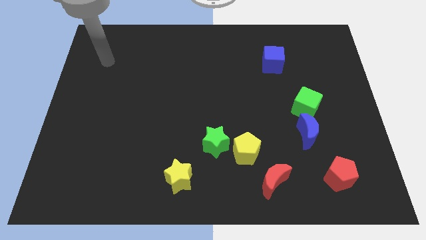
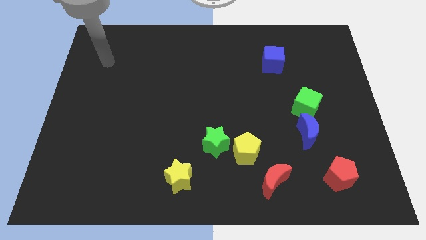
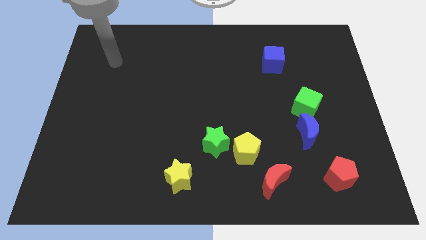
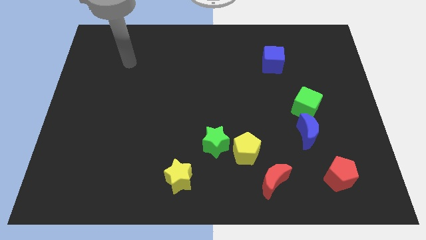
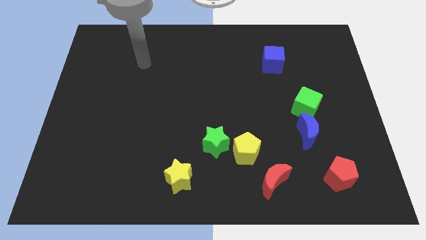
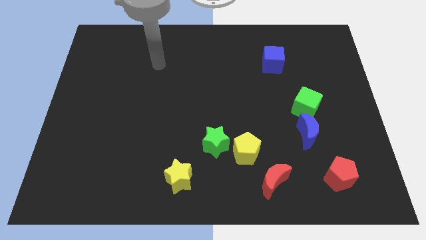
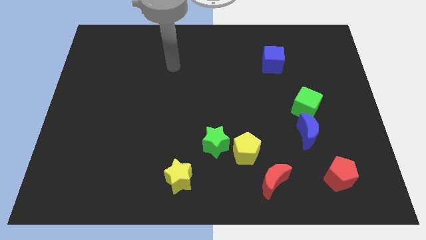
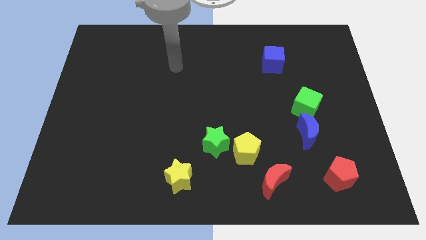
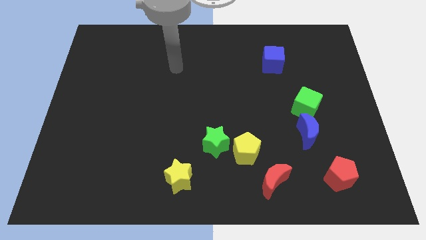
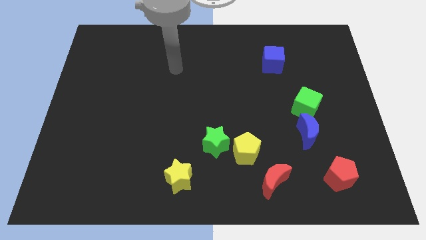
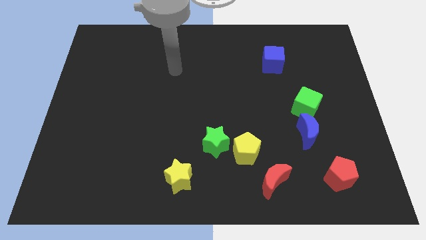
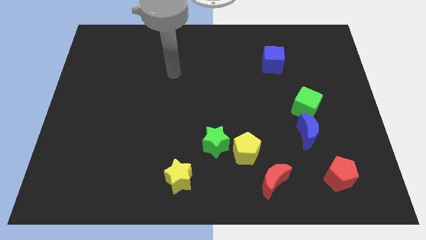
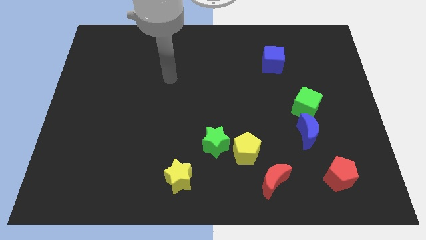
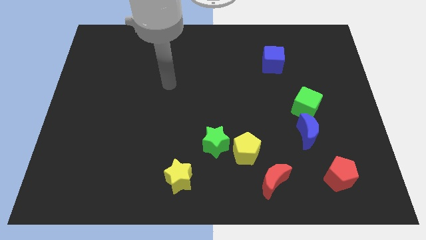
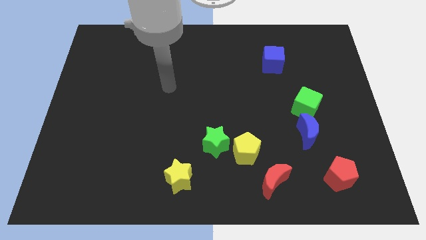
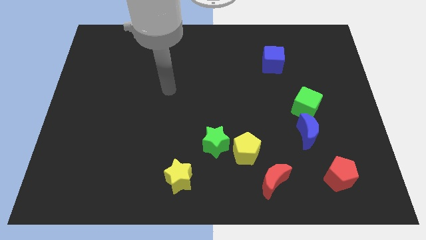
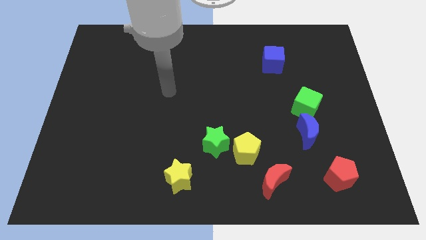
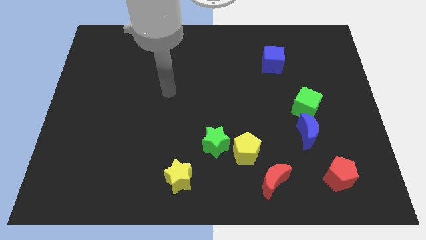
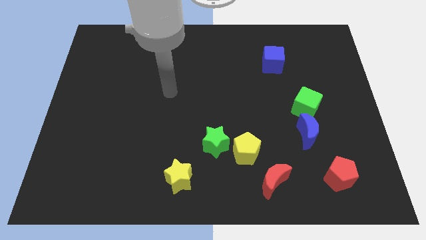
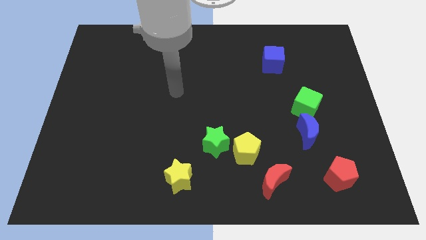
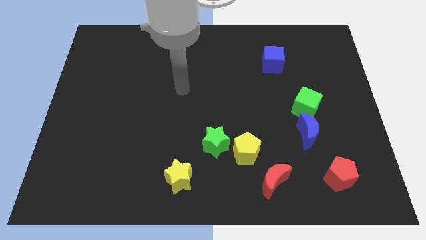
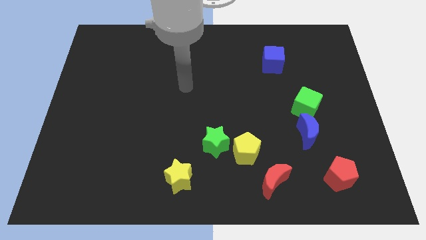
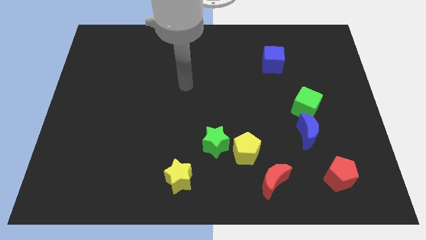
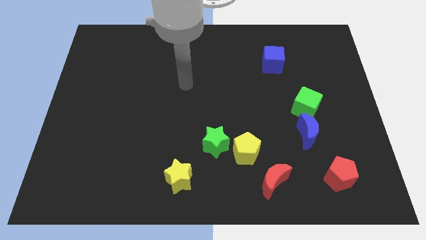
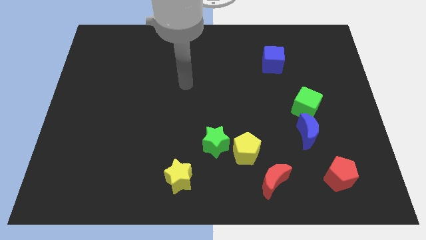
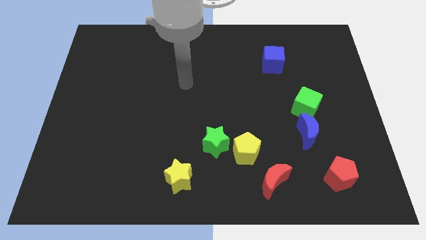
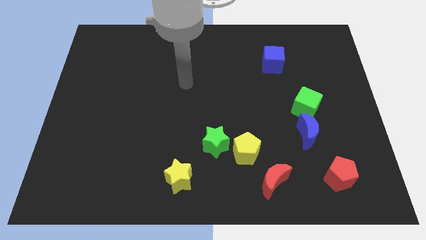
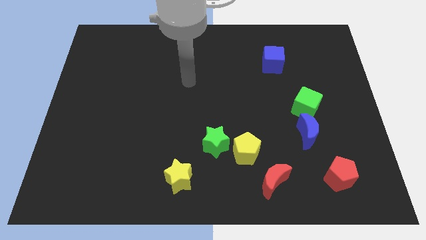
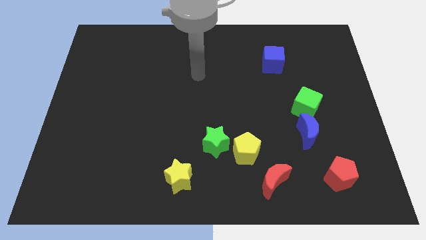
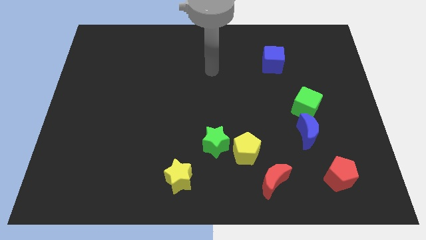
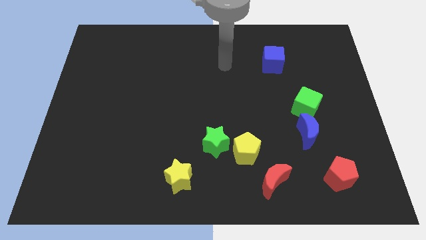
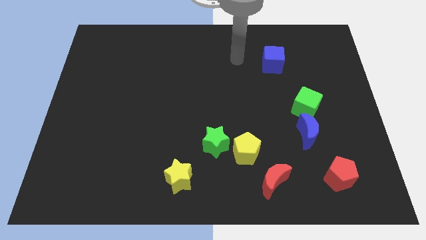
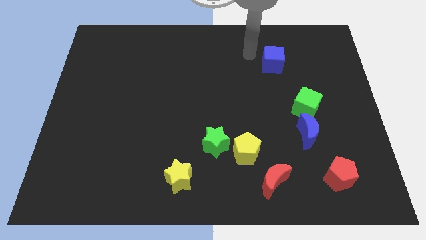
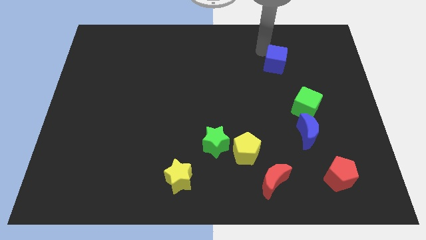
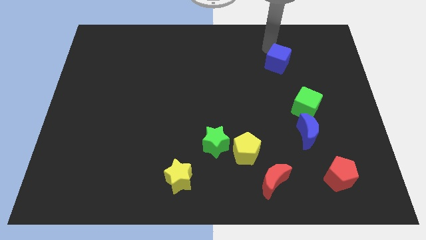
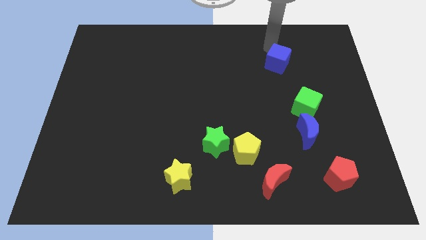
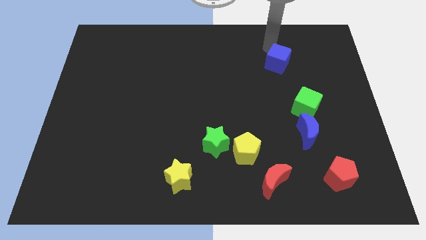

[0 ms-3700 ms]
move your arm near blue cube

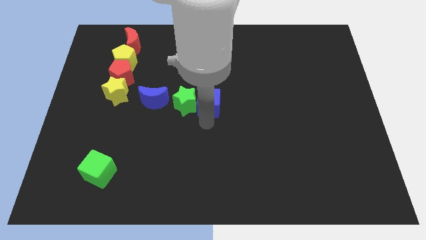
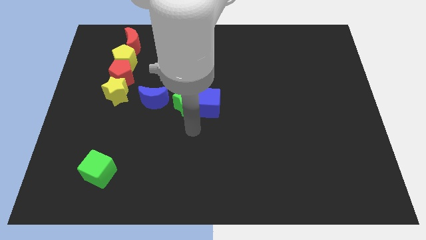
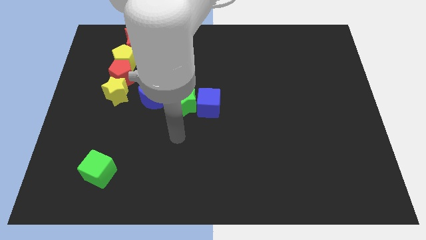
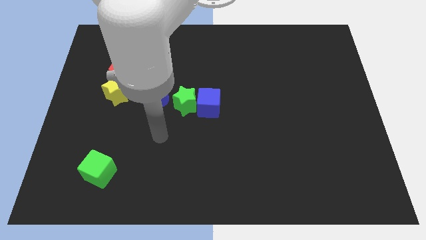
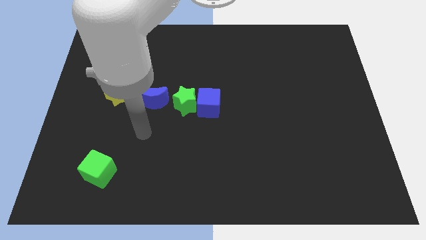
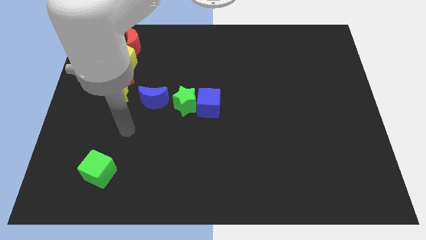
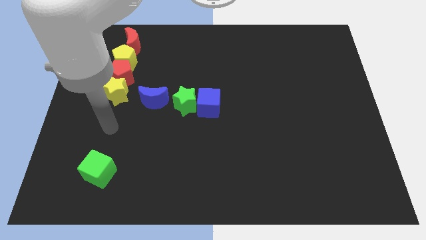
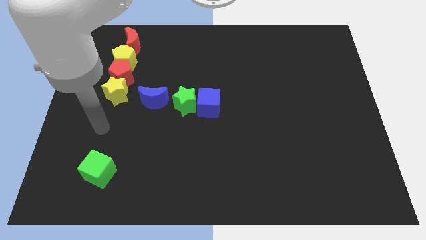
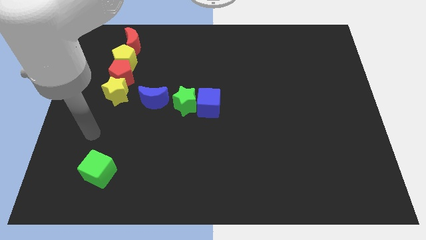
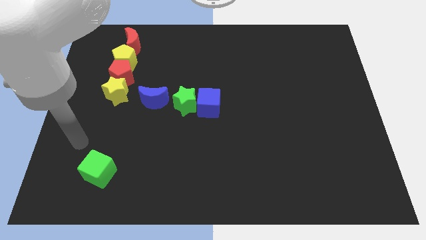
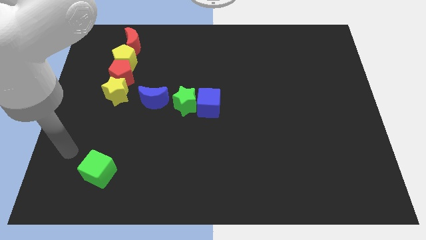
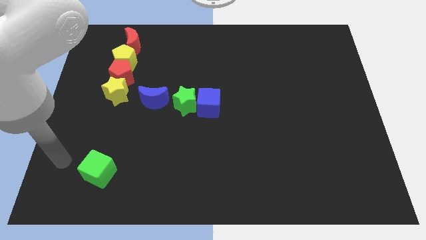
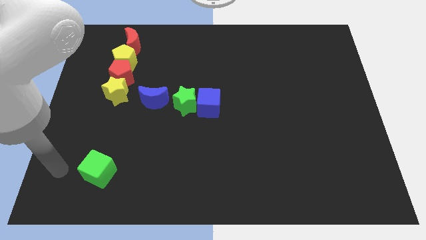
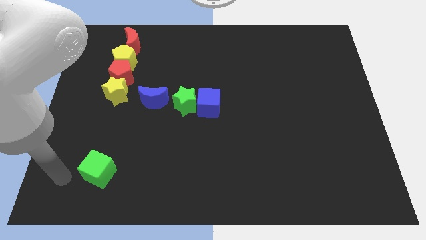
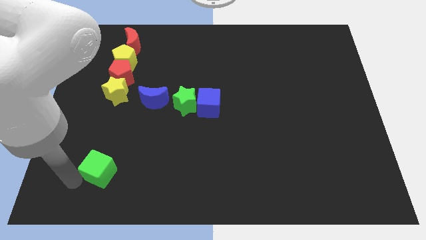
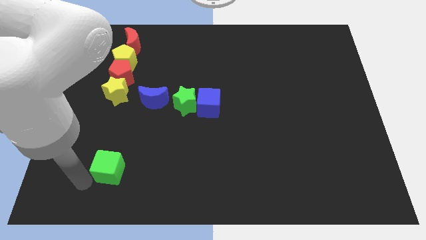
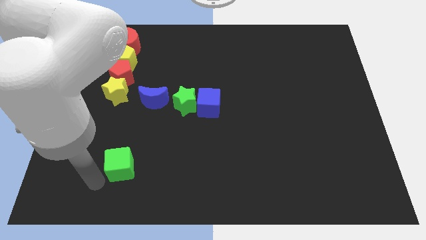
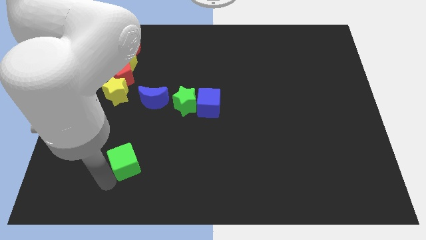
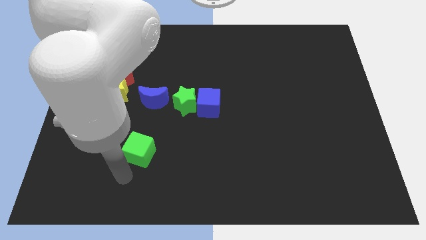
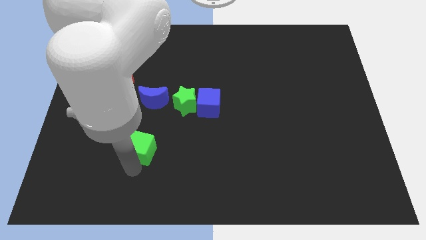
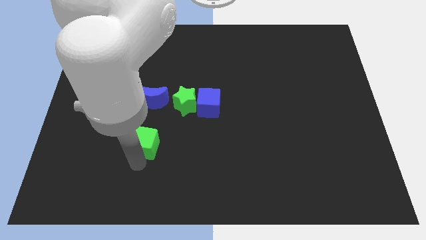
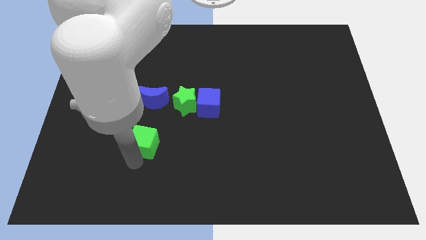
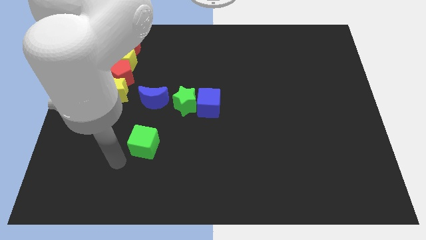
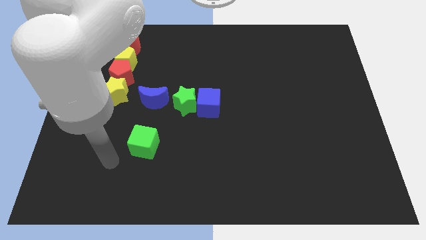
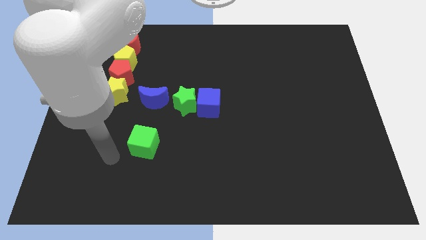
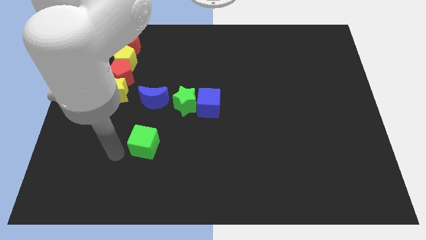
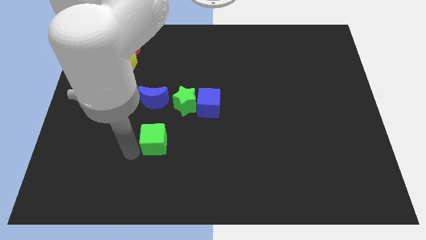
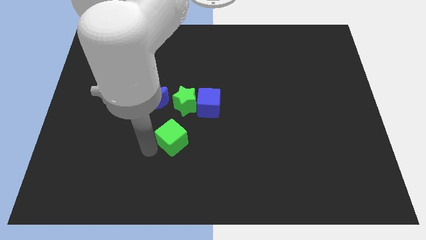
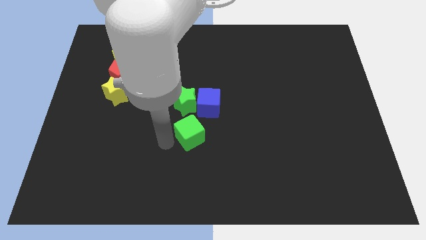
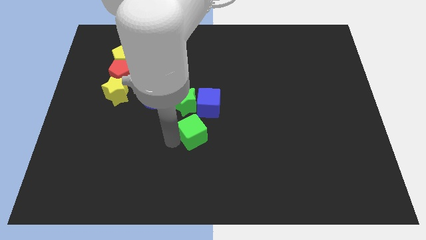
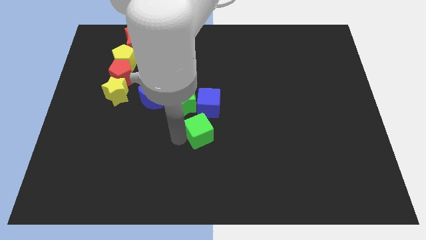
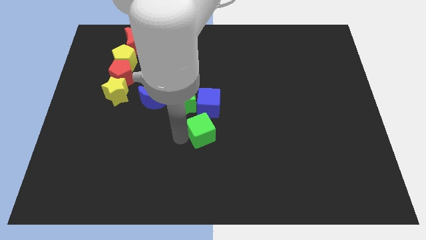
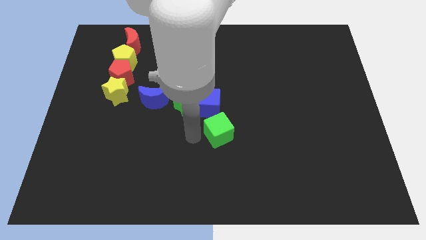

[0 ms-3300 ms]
move the green cube to the bottom right of the blue cube

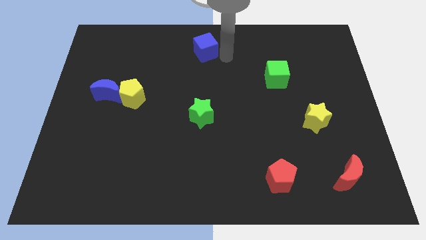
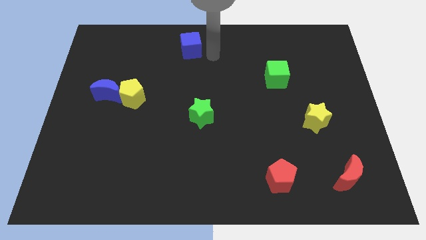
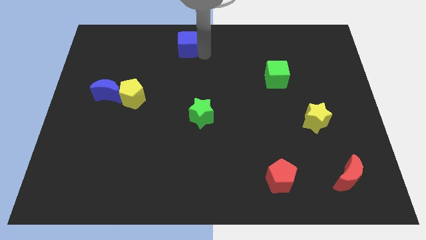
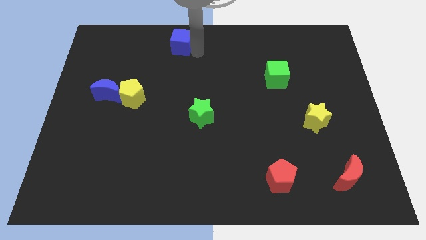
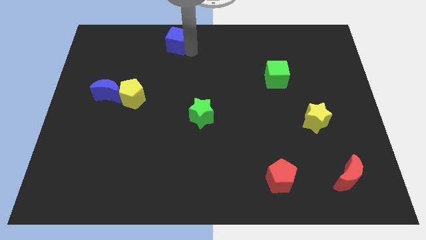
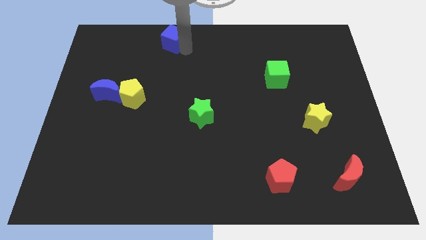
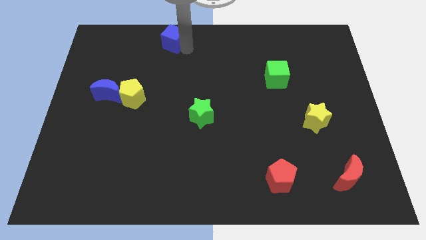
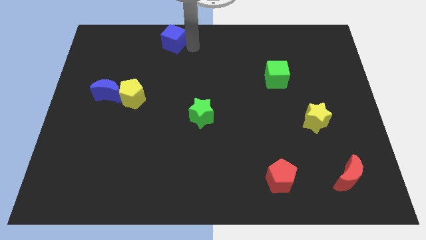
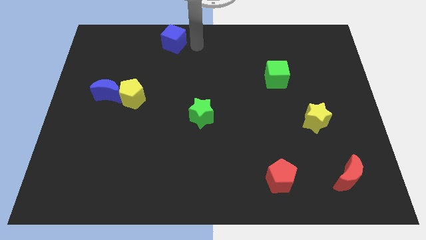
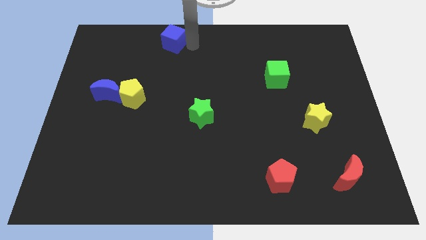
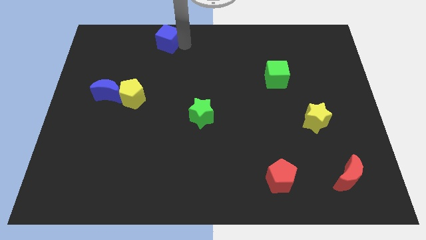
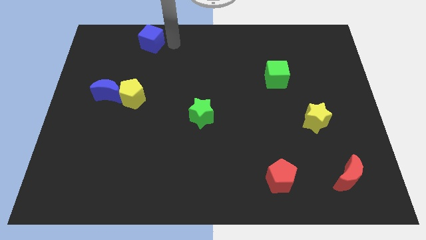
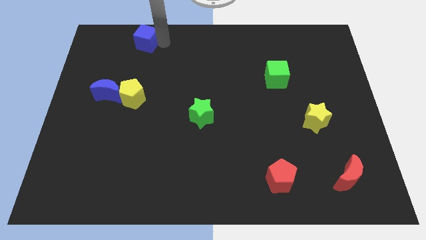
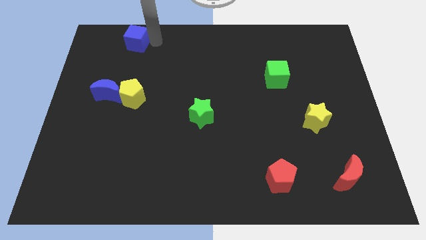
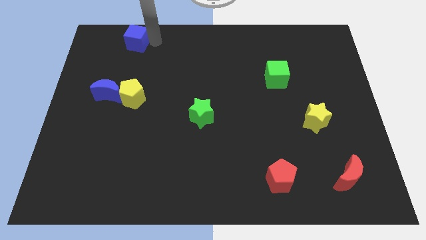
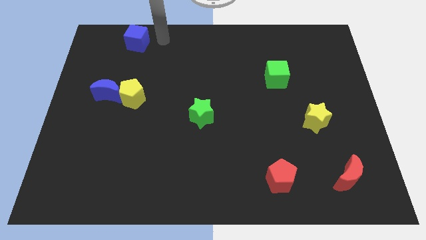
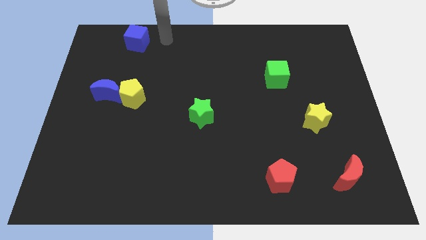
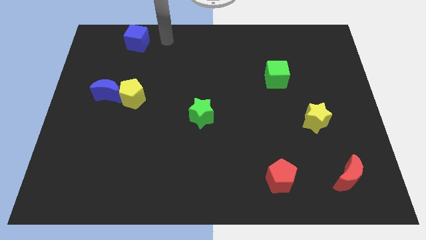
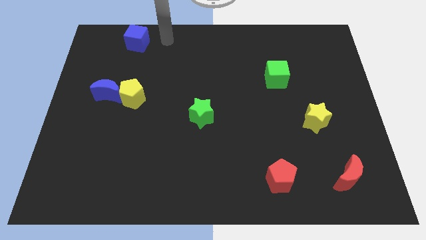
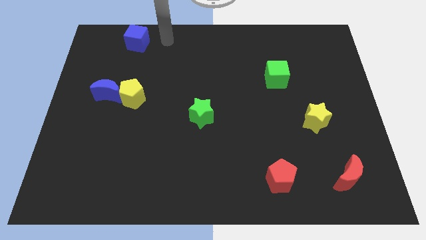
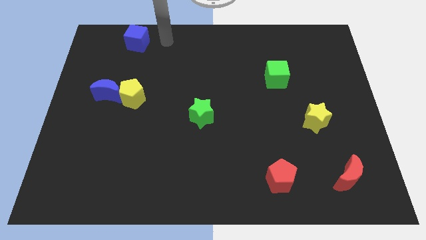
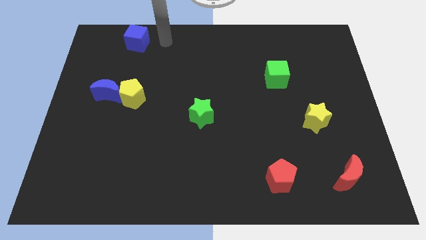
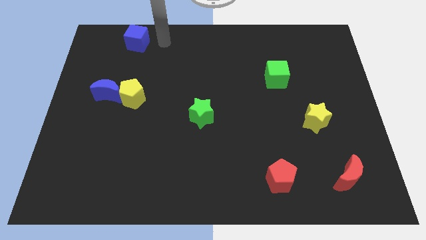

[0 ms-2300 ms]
move the blue cube above the yellow pentagon
